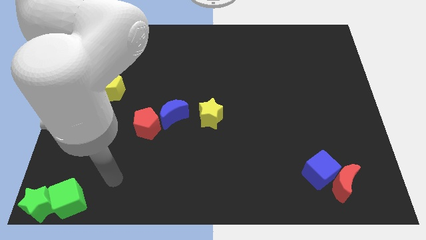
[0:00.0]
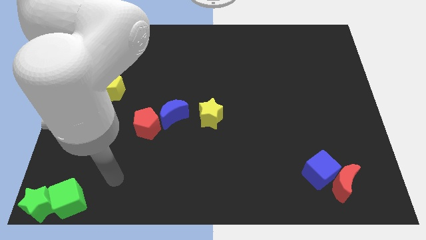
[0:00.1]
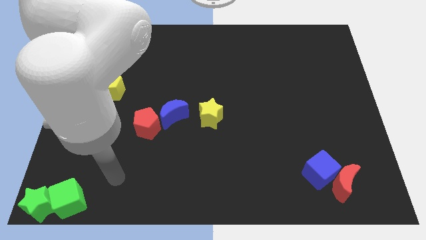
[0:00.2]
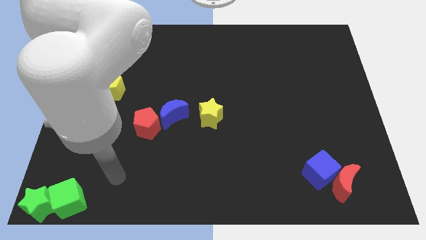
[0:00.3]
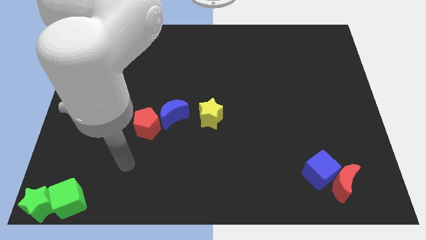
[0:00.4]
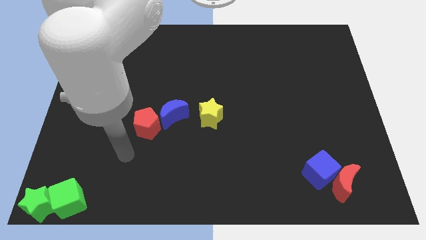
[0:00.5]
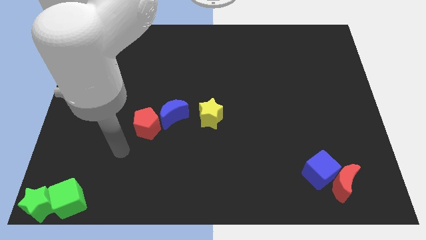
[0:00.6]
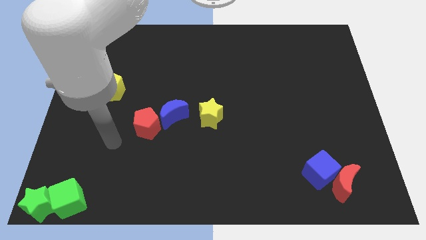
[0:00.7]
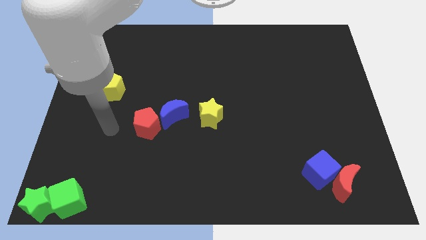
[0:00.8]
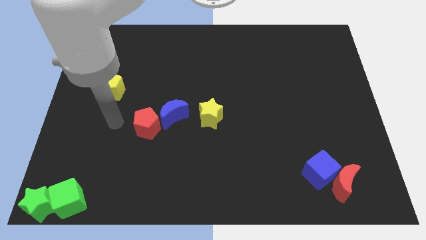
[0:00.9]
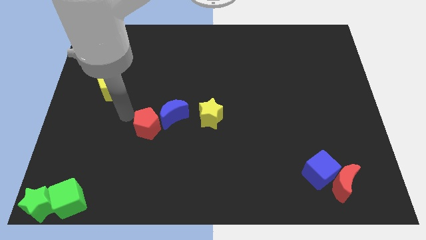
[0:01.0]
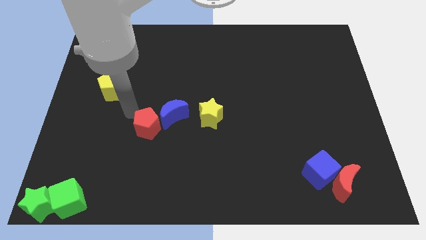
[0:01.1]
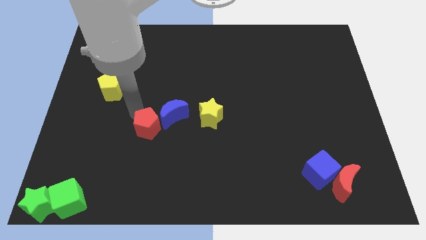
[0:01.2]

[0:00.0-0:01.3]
point your arm above red pentagon

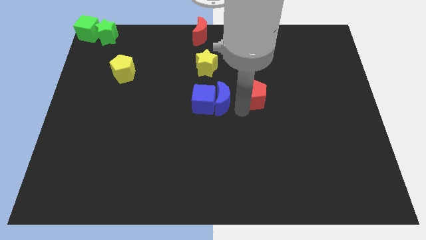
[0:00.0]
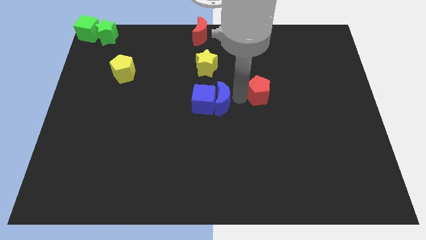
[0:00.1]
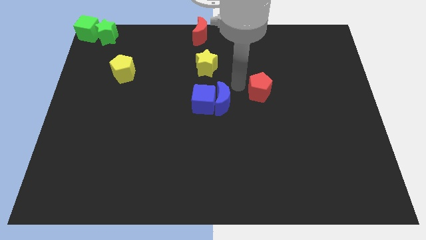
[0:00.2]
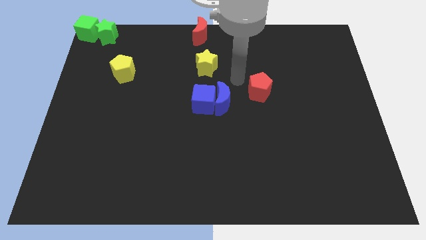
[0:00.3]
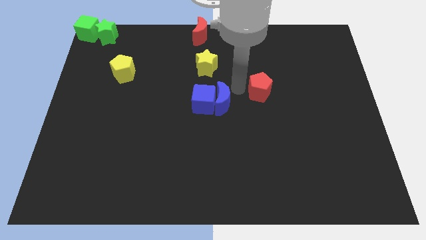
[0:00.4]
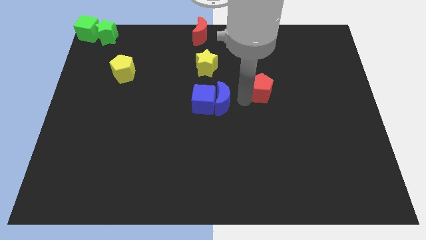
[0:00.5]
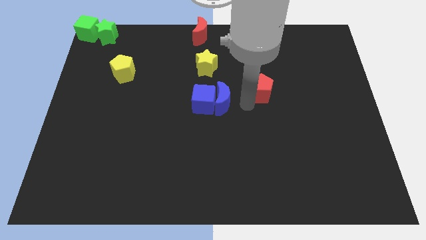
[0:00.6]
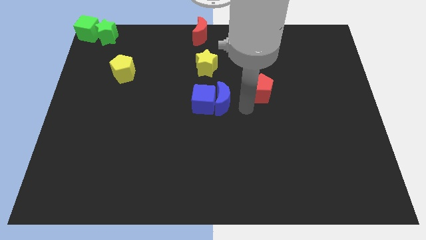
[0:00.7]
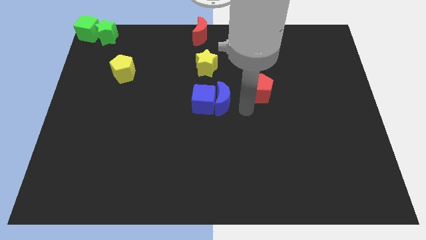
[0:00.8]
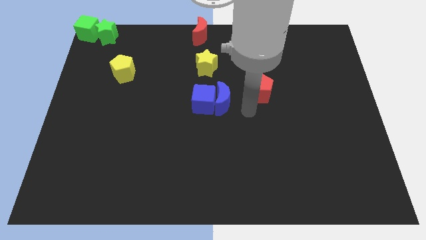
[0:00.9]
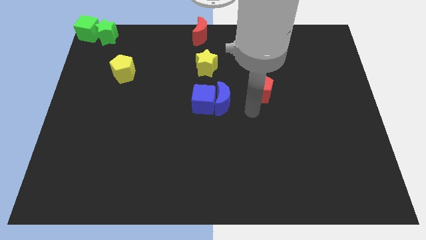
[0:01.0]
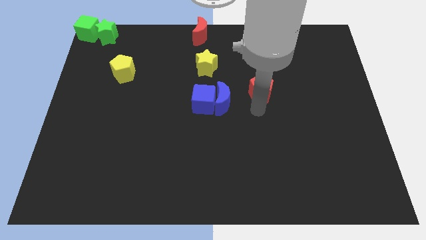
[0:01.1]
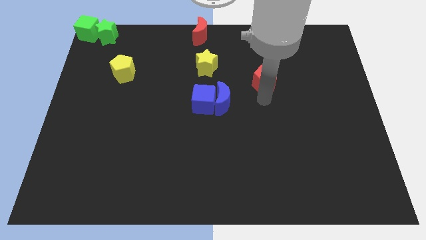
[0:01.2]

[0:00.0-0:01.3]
slightly move the red pentagon to the right

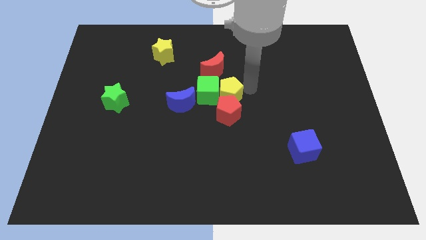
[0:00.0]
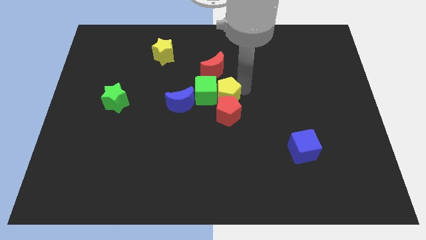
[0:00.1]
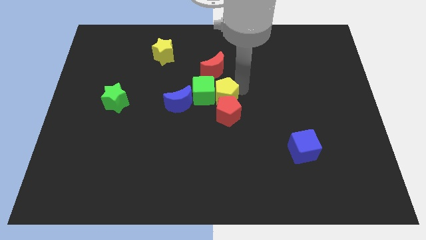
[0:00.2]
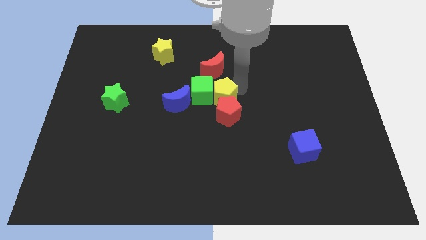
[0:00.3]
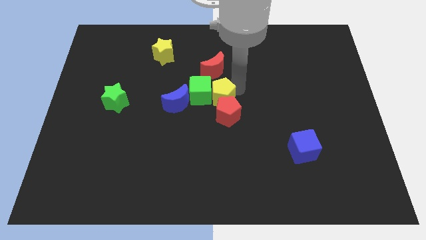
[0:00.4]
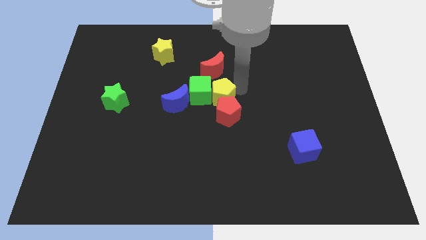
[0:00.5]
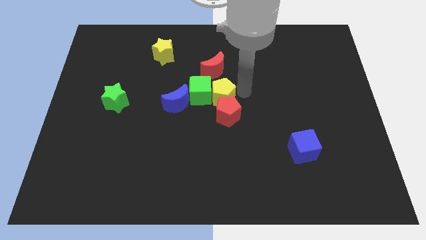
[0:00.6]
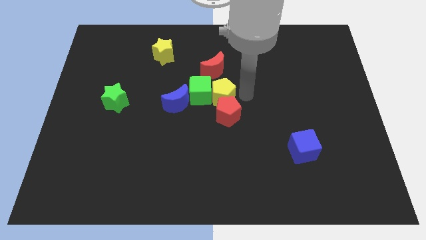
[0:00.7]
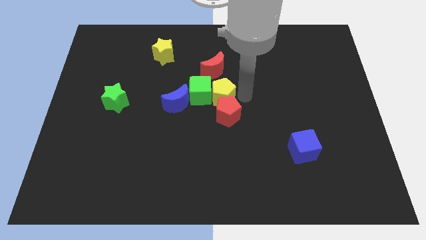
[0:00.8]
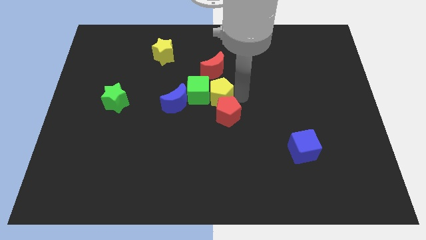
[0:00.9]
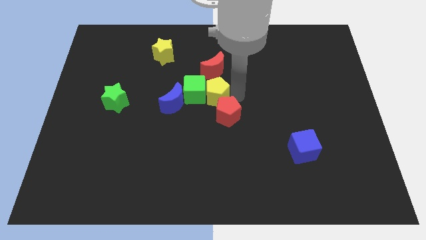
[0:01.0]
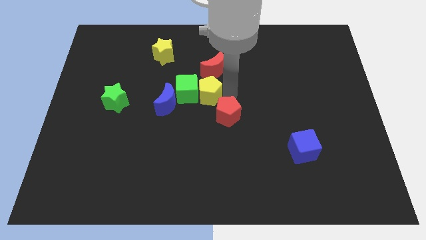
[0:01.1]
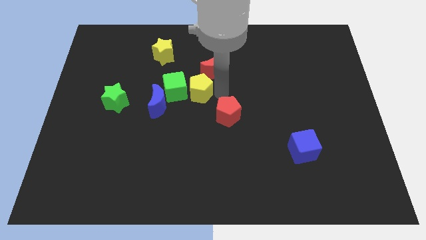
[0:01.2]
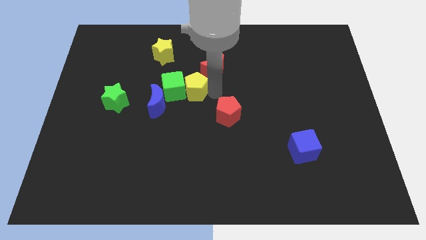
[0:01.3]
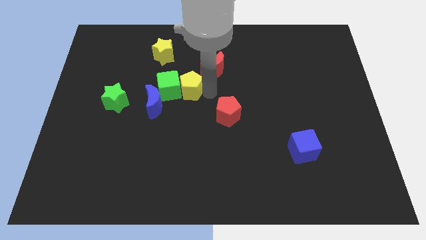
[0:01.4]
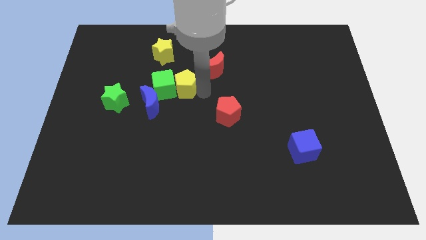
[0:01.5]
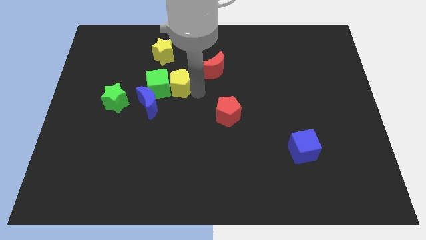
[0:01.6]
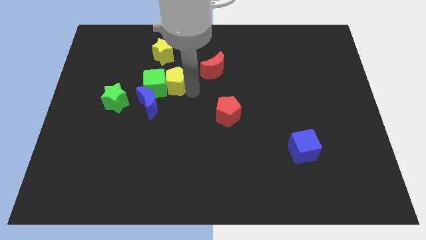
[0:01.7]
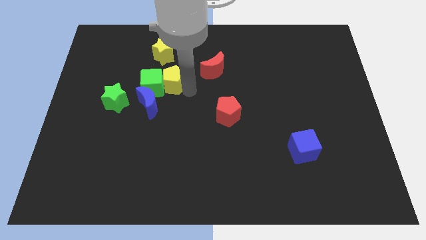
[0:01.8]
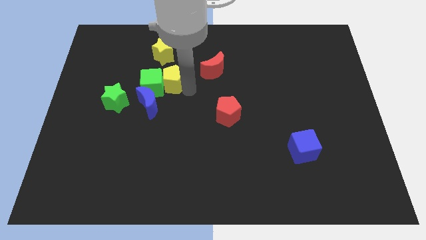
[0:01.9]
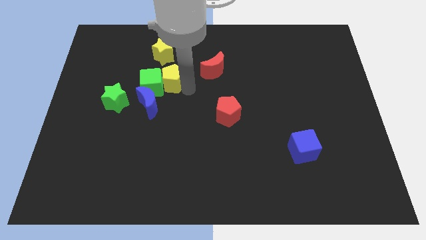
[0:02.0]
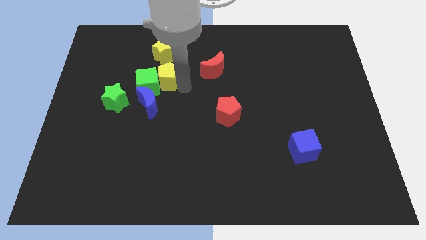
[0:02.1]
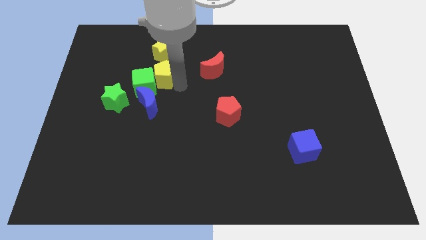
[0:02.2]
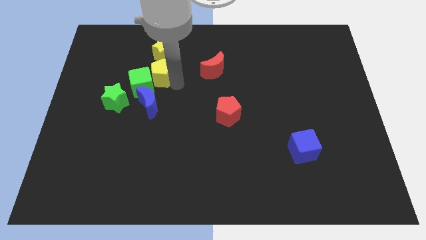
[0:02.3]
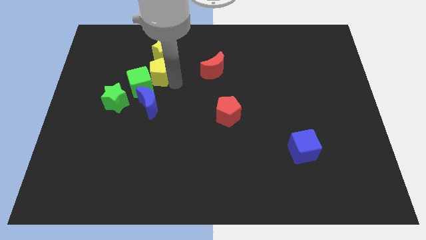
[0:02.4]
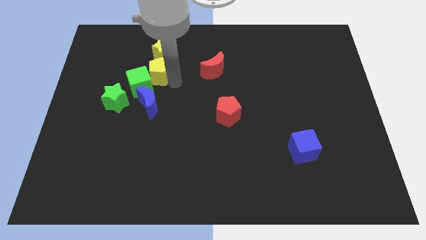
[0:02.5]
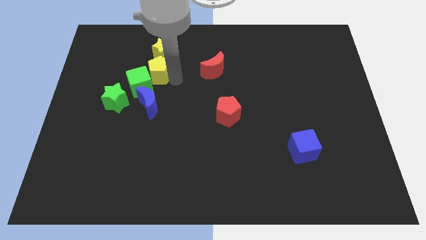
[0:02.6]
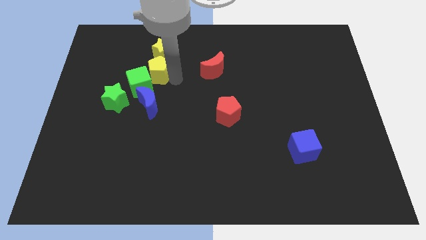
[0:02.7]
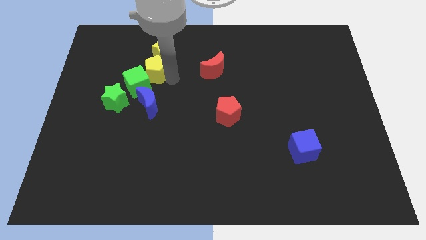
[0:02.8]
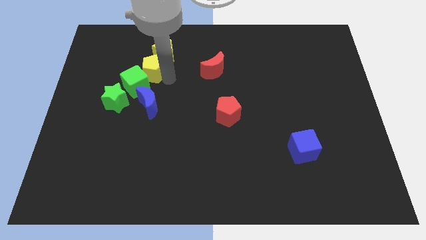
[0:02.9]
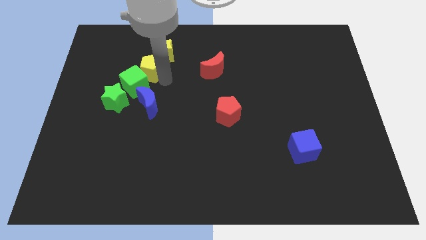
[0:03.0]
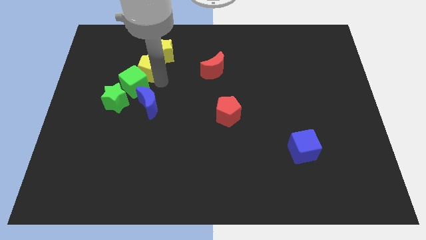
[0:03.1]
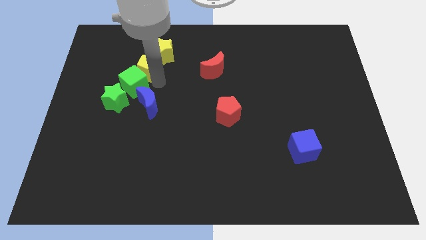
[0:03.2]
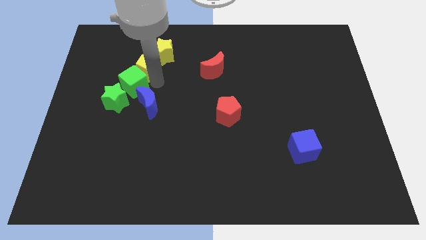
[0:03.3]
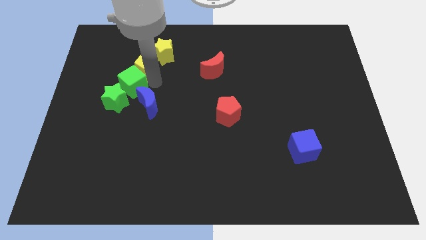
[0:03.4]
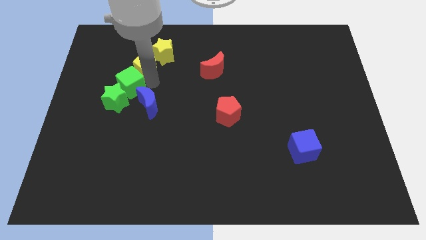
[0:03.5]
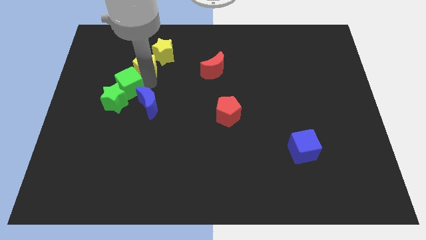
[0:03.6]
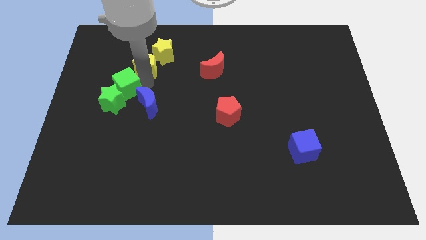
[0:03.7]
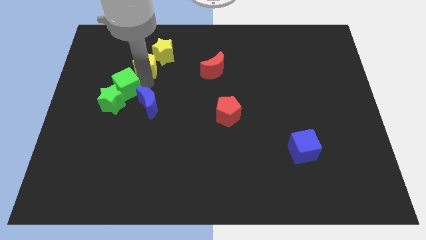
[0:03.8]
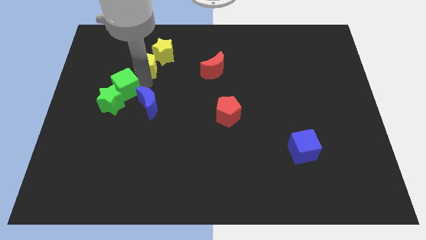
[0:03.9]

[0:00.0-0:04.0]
push both green cube and yellow pentagon towards left

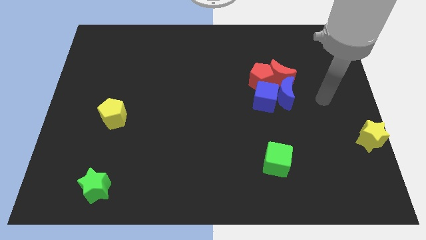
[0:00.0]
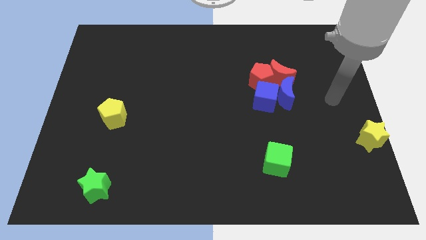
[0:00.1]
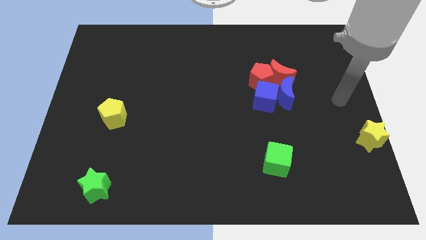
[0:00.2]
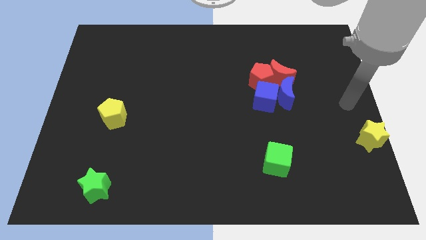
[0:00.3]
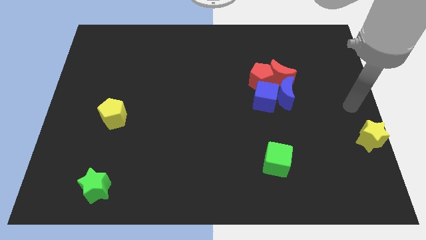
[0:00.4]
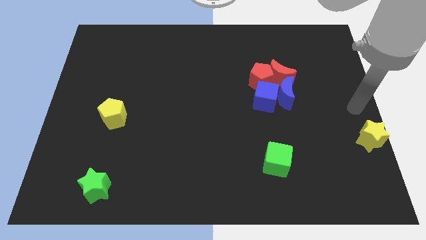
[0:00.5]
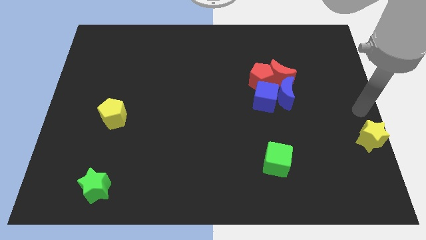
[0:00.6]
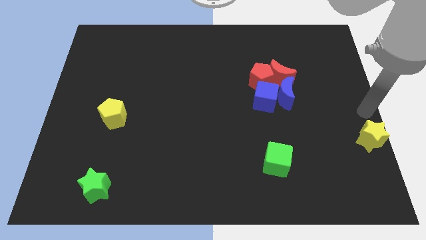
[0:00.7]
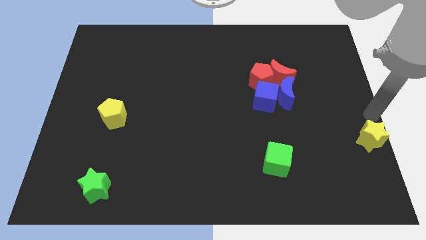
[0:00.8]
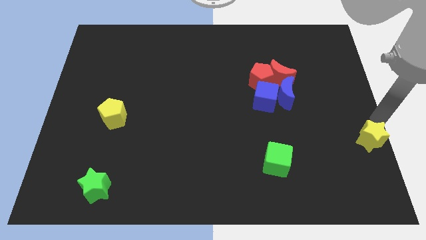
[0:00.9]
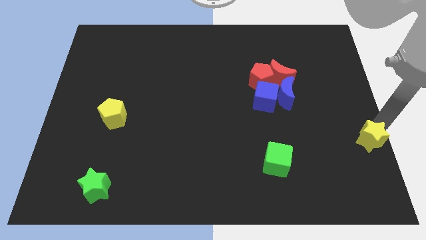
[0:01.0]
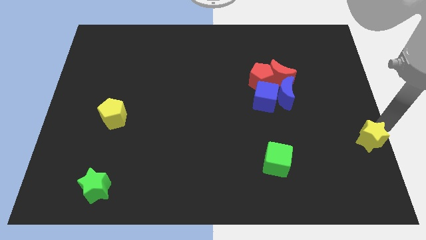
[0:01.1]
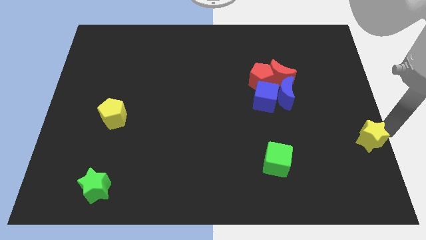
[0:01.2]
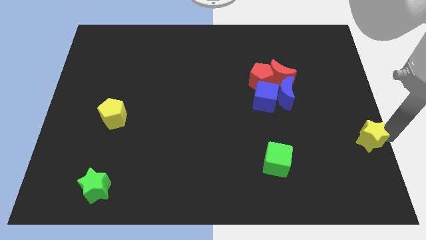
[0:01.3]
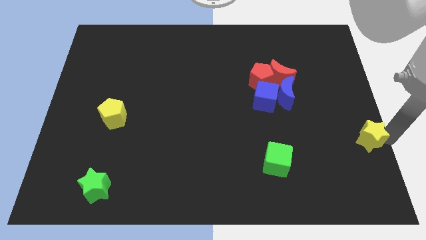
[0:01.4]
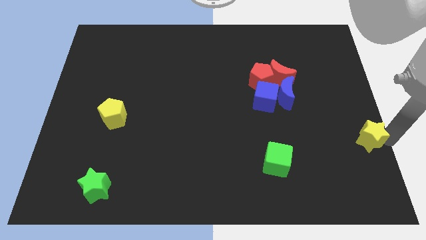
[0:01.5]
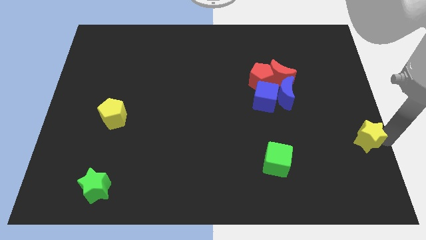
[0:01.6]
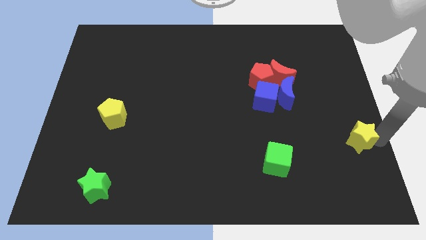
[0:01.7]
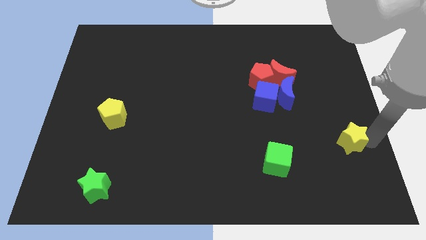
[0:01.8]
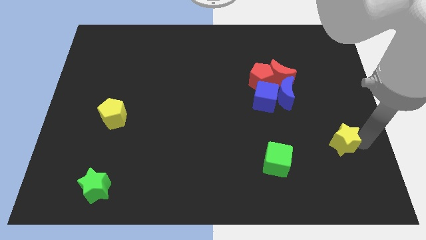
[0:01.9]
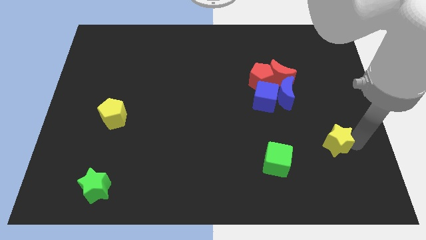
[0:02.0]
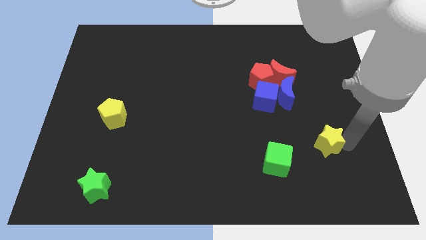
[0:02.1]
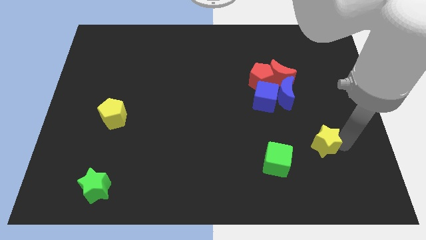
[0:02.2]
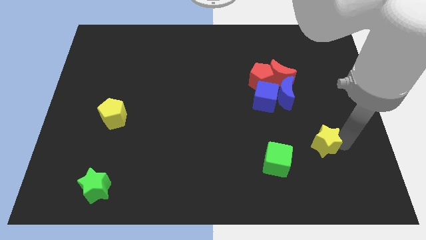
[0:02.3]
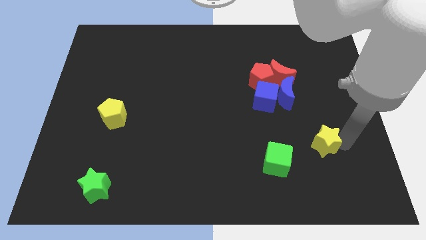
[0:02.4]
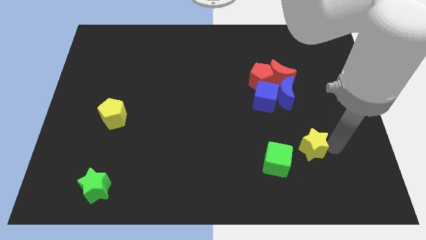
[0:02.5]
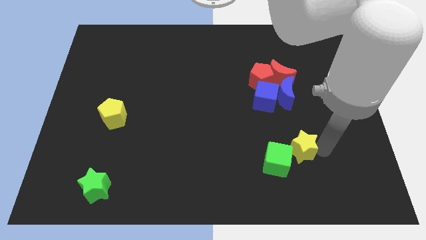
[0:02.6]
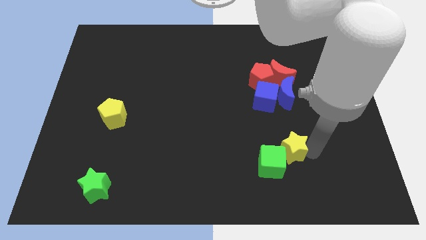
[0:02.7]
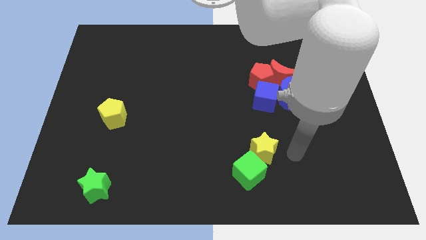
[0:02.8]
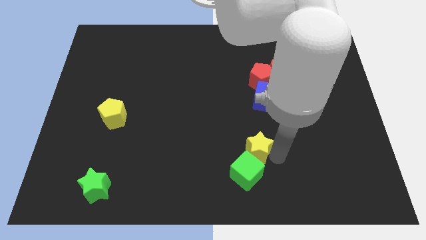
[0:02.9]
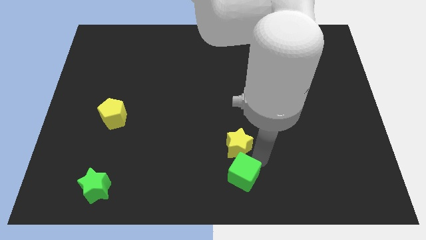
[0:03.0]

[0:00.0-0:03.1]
push the yellow star above the green cube
